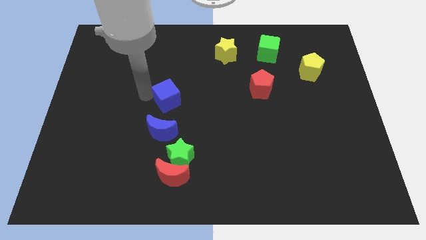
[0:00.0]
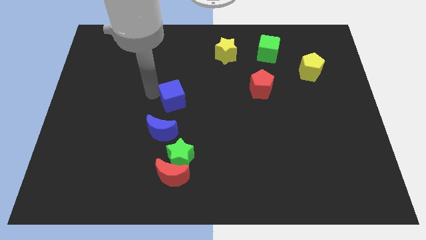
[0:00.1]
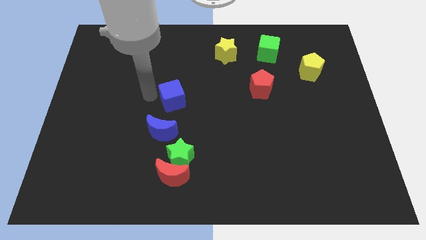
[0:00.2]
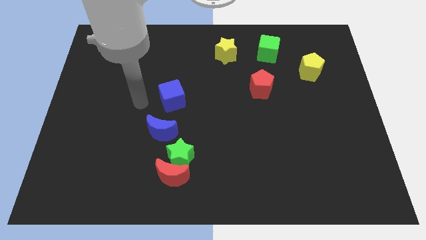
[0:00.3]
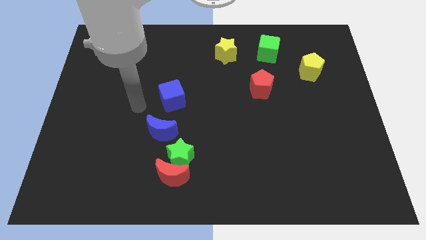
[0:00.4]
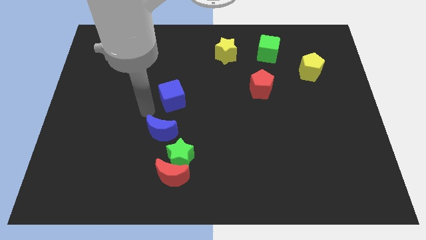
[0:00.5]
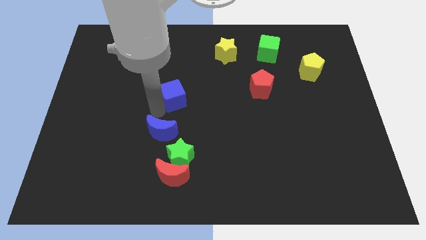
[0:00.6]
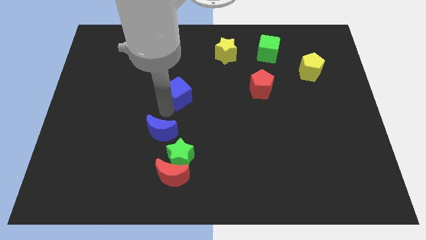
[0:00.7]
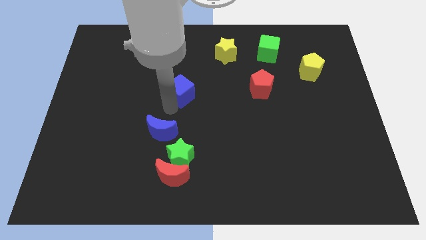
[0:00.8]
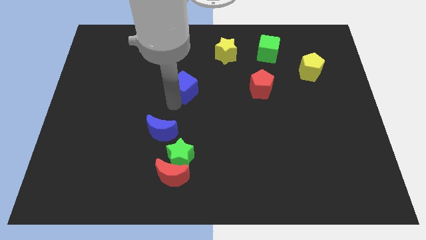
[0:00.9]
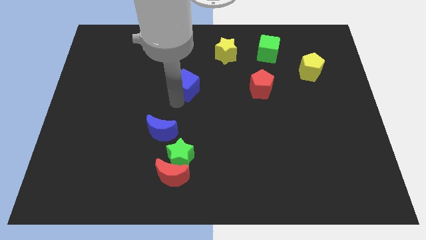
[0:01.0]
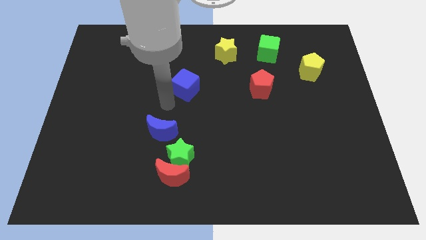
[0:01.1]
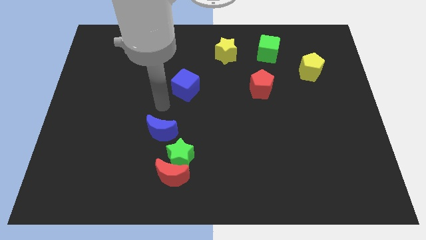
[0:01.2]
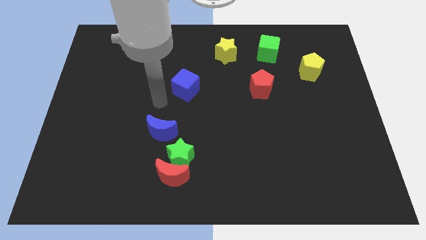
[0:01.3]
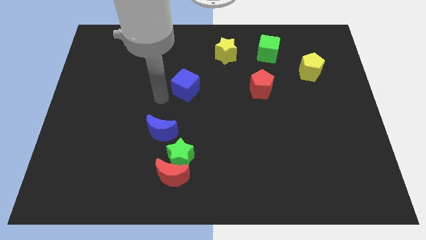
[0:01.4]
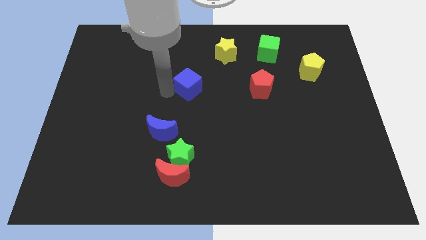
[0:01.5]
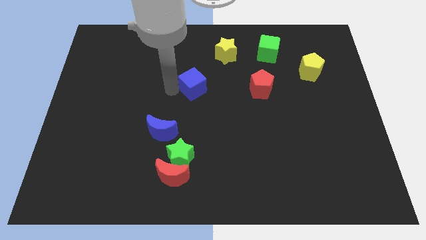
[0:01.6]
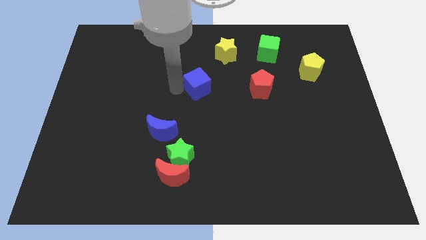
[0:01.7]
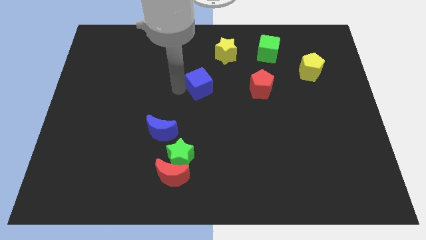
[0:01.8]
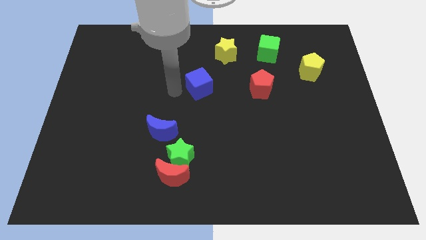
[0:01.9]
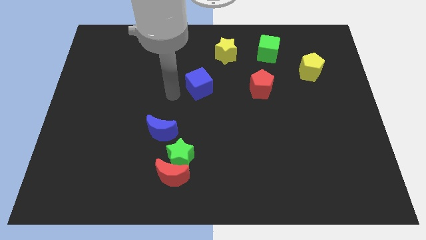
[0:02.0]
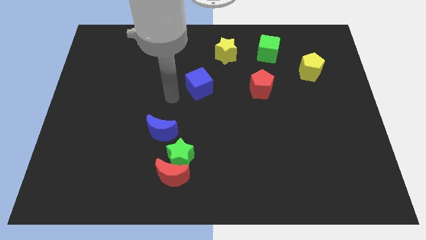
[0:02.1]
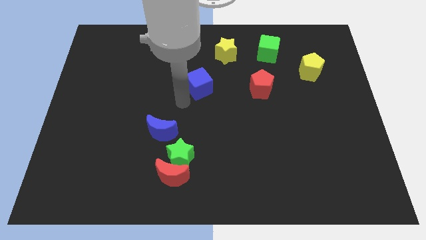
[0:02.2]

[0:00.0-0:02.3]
move the blue cube to the horizontal left of the red pentagon

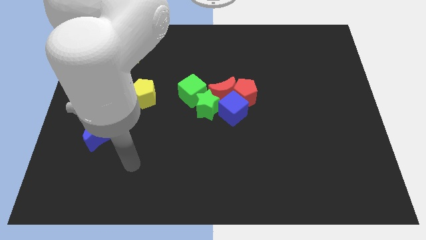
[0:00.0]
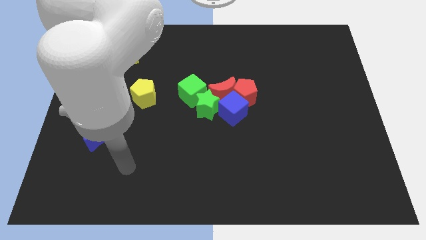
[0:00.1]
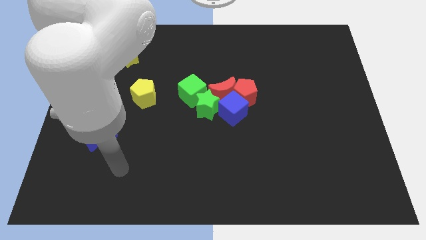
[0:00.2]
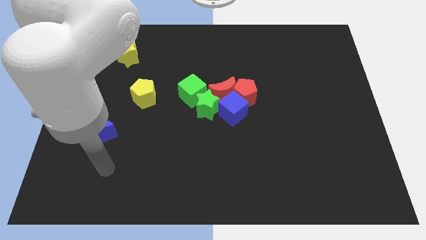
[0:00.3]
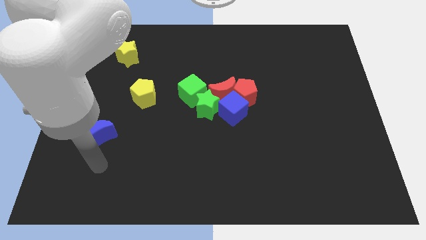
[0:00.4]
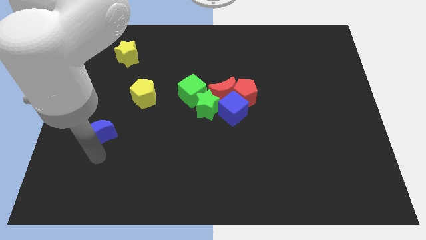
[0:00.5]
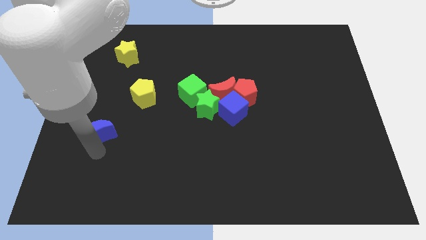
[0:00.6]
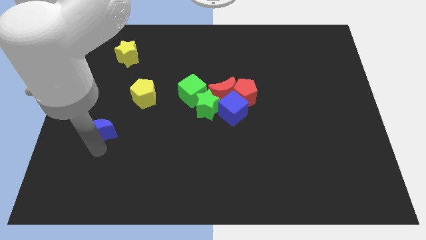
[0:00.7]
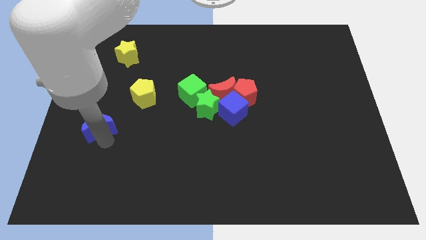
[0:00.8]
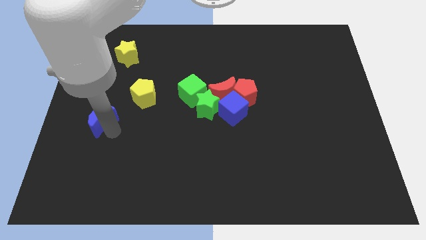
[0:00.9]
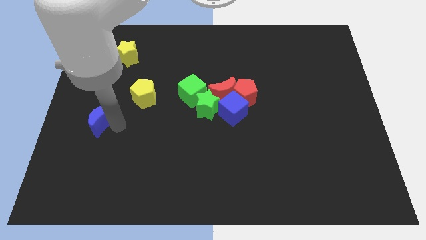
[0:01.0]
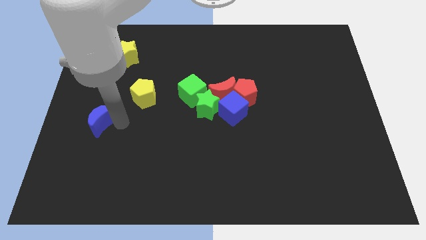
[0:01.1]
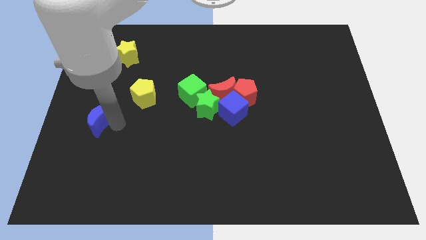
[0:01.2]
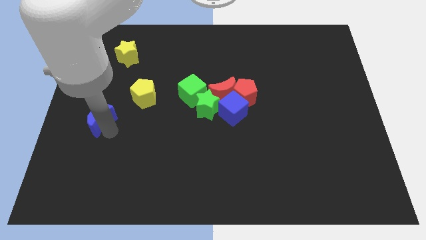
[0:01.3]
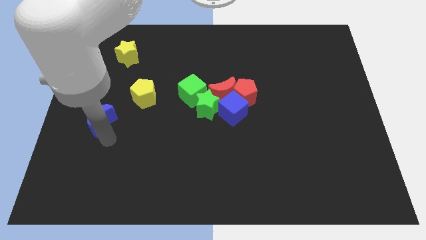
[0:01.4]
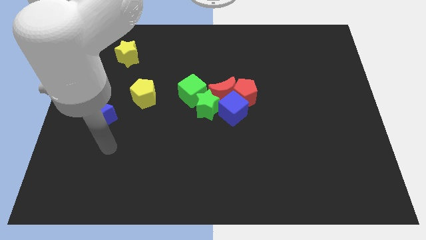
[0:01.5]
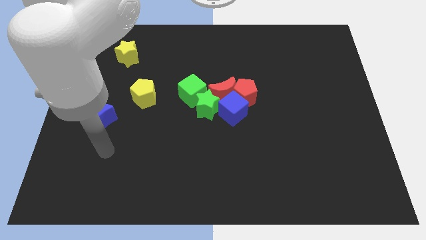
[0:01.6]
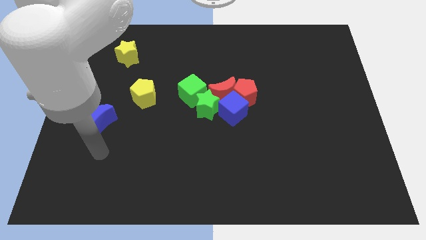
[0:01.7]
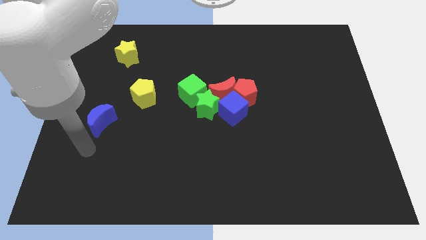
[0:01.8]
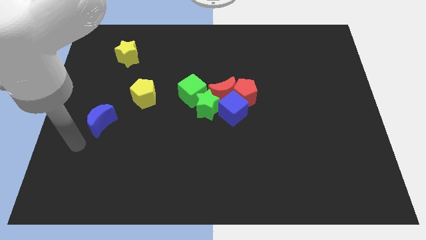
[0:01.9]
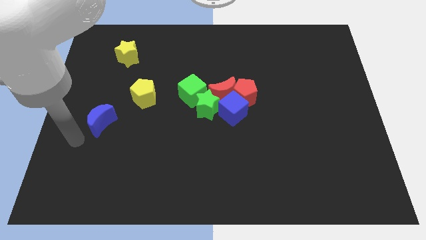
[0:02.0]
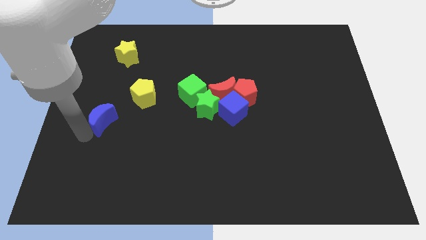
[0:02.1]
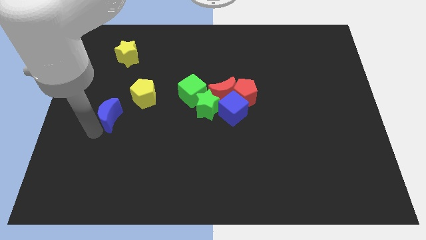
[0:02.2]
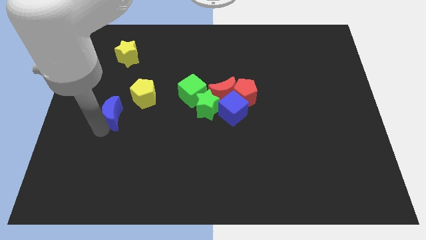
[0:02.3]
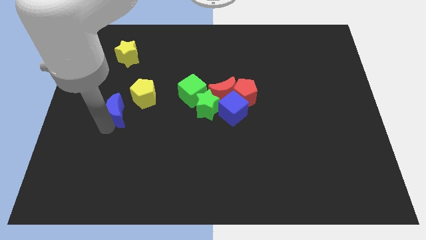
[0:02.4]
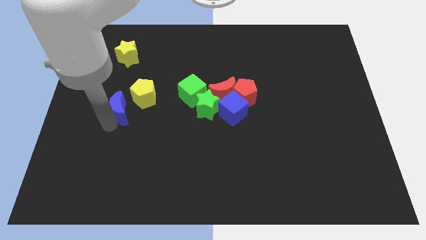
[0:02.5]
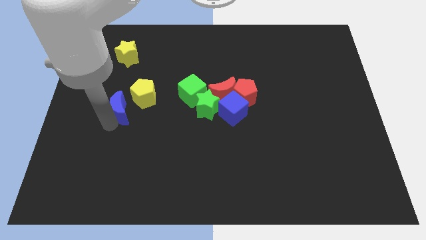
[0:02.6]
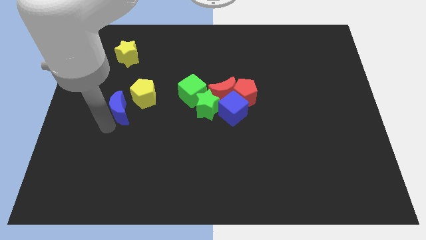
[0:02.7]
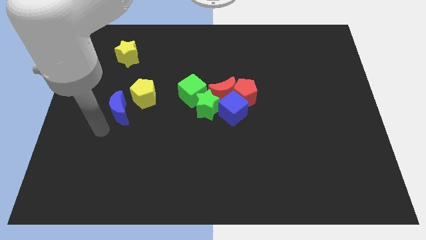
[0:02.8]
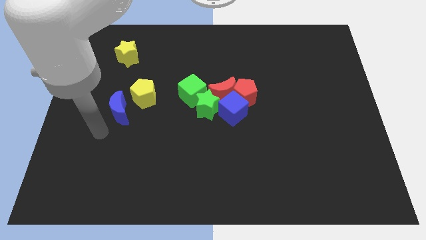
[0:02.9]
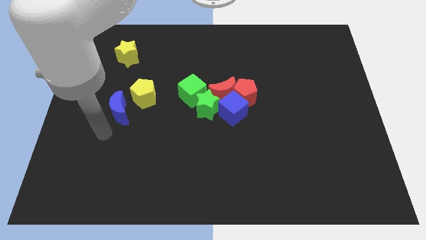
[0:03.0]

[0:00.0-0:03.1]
move the blue crescent near to the yellow pentagon

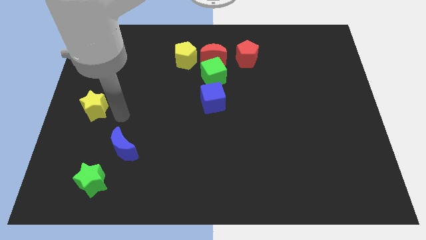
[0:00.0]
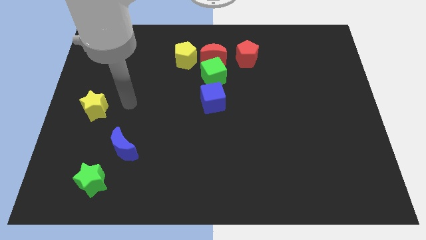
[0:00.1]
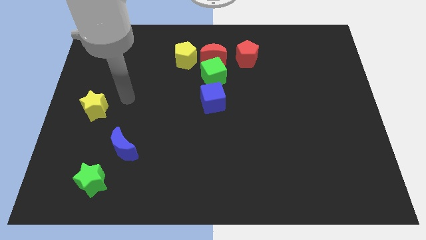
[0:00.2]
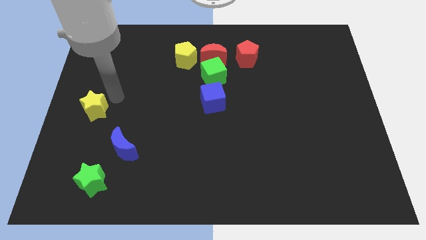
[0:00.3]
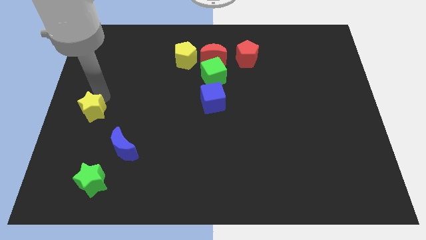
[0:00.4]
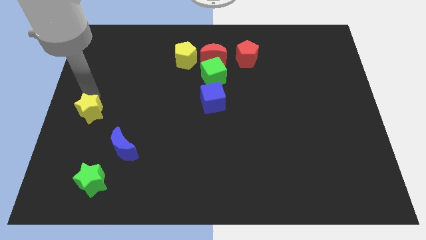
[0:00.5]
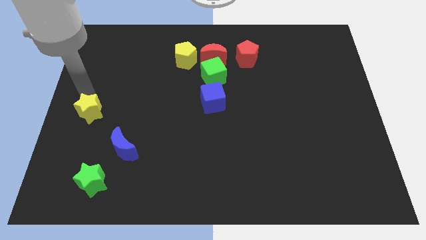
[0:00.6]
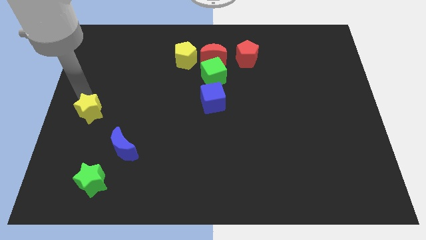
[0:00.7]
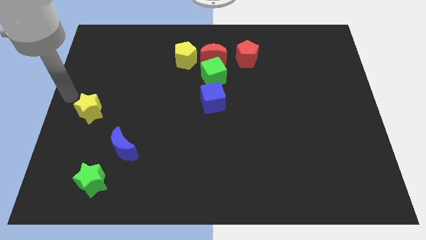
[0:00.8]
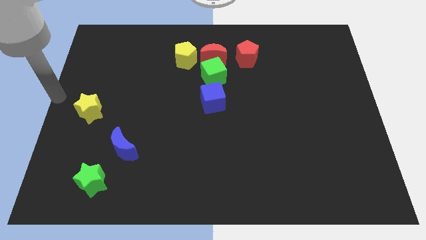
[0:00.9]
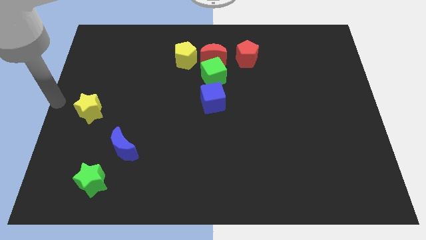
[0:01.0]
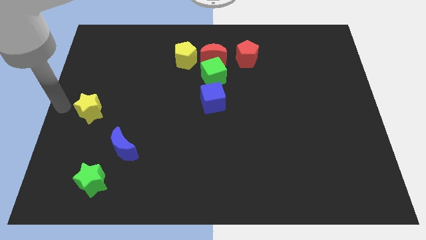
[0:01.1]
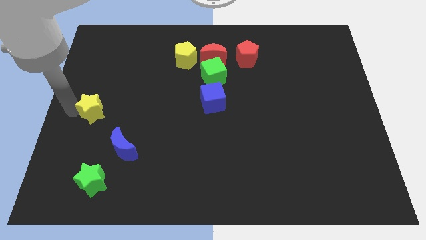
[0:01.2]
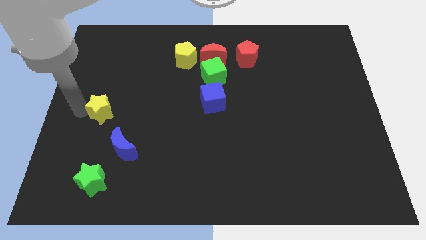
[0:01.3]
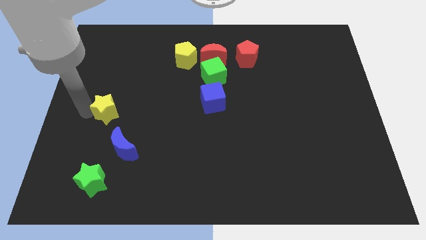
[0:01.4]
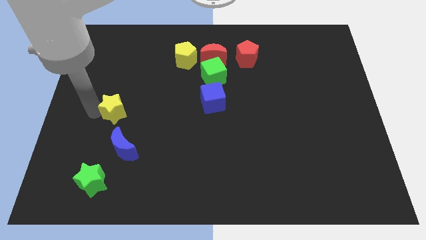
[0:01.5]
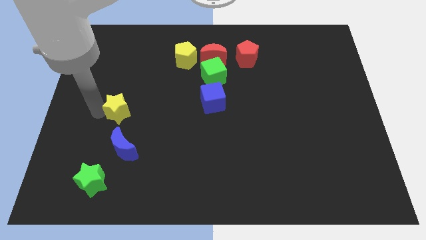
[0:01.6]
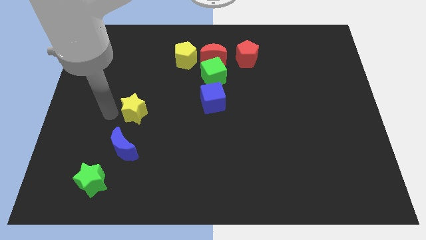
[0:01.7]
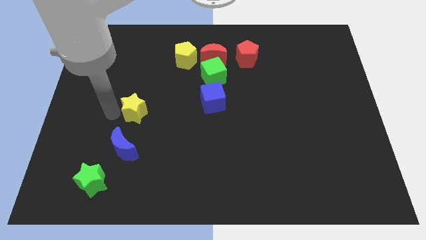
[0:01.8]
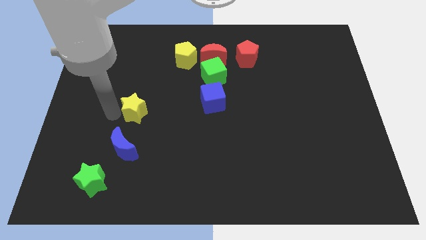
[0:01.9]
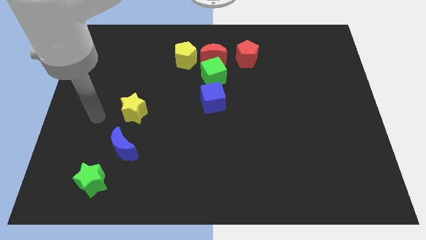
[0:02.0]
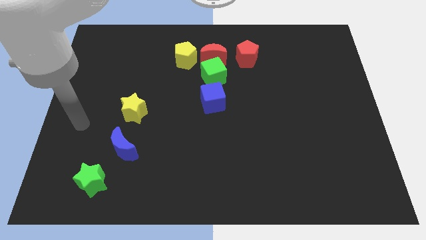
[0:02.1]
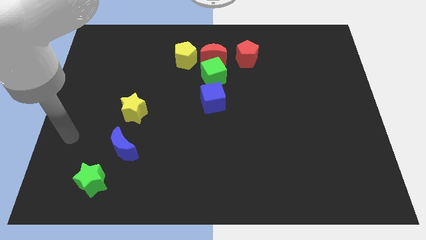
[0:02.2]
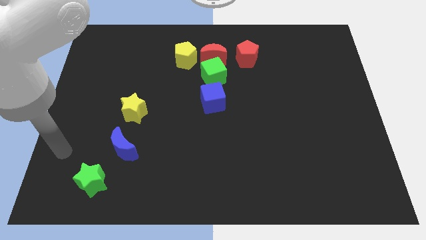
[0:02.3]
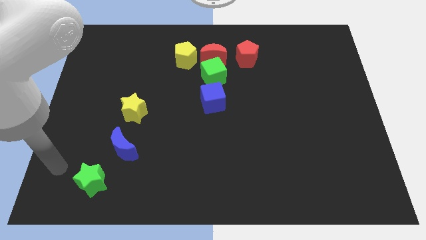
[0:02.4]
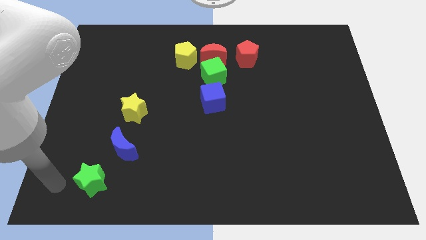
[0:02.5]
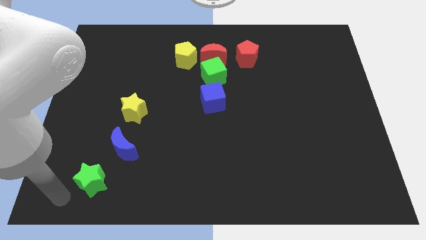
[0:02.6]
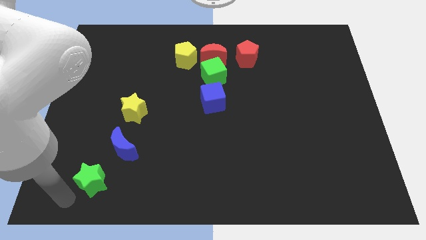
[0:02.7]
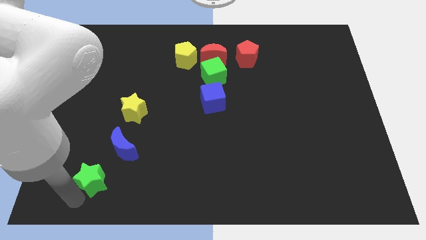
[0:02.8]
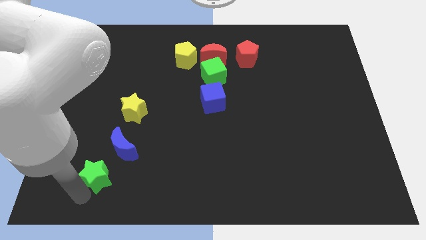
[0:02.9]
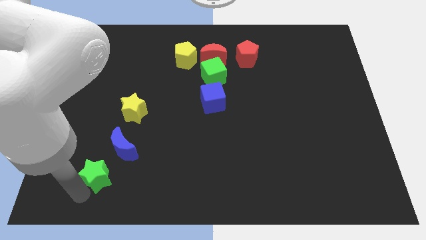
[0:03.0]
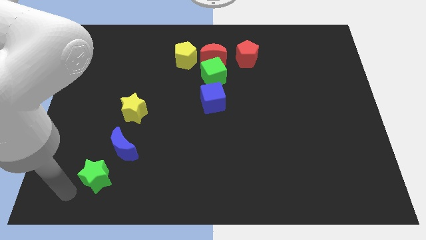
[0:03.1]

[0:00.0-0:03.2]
push the yellow star to the top of blue crescent

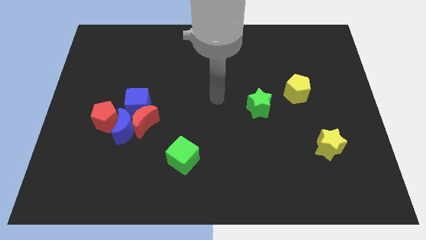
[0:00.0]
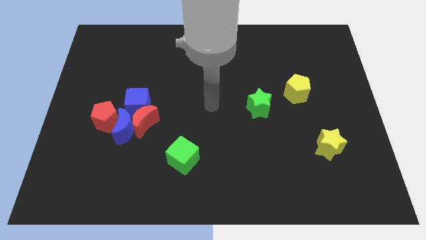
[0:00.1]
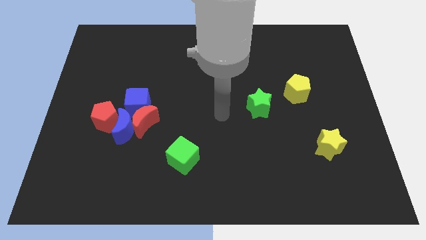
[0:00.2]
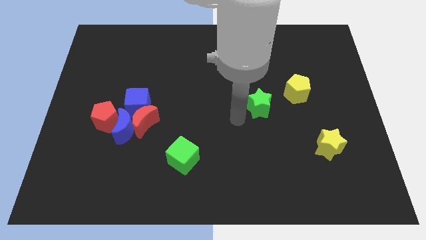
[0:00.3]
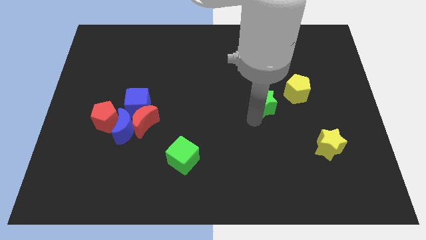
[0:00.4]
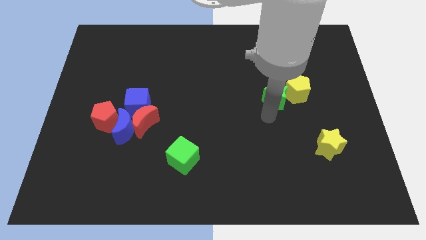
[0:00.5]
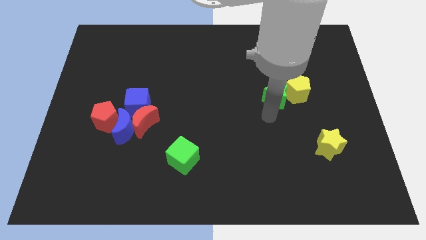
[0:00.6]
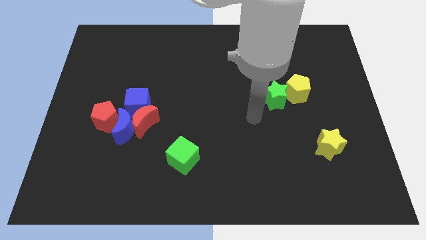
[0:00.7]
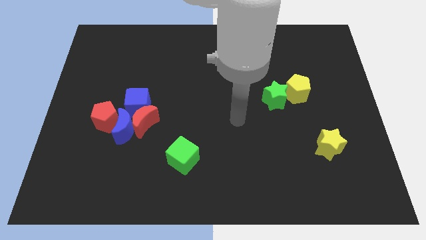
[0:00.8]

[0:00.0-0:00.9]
push the green star into the yellow pentagon
